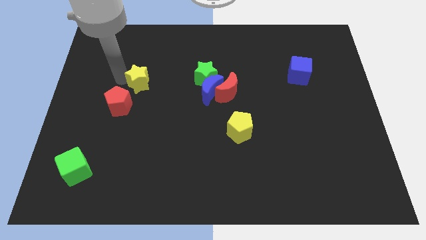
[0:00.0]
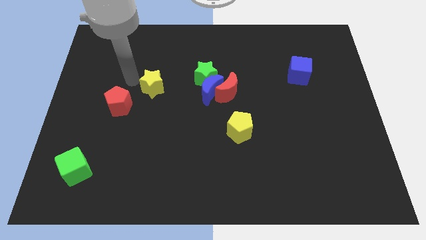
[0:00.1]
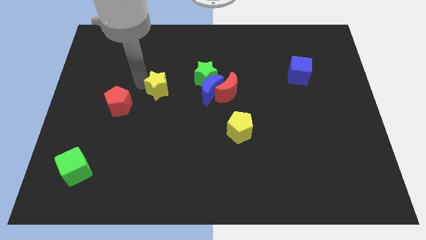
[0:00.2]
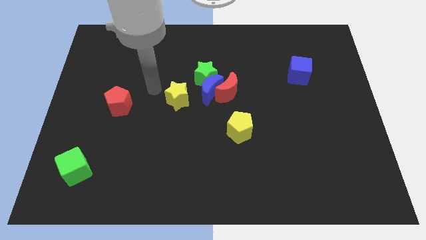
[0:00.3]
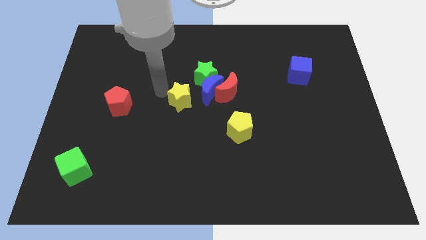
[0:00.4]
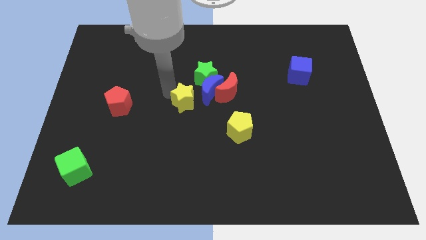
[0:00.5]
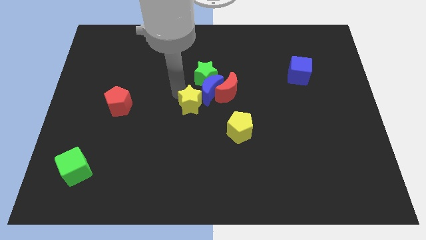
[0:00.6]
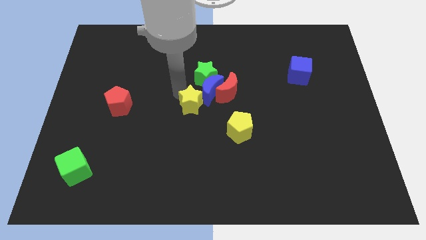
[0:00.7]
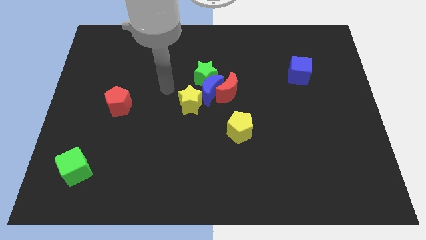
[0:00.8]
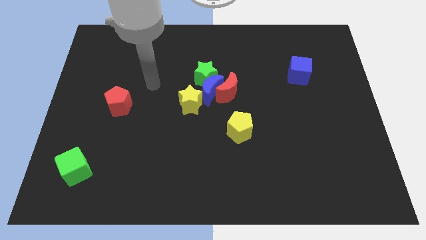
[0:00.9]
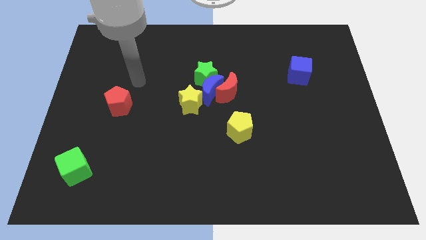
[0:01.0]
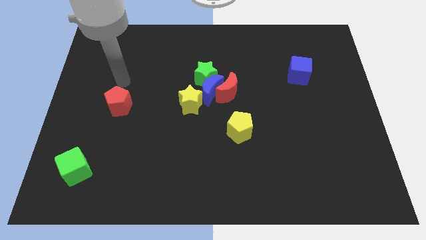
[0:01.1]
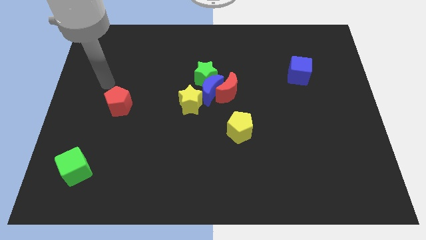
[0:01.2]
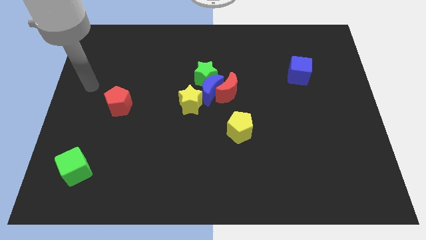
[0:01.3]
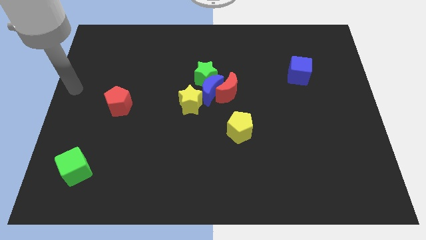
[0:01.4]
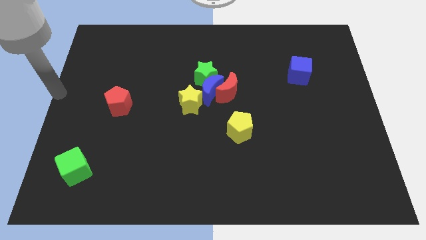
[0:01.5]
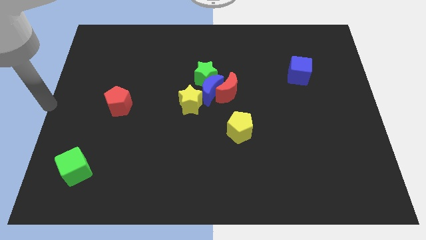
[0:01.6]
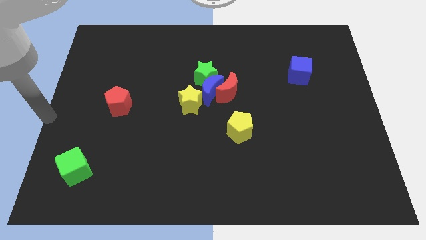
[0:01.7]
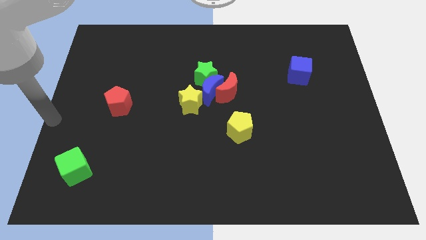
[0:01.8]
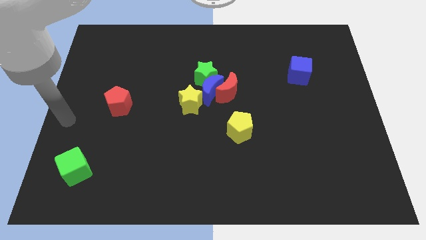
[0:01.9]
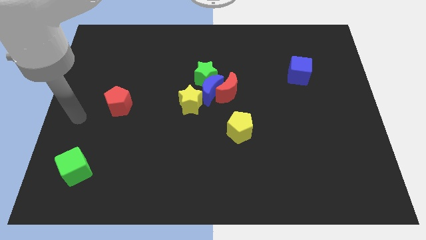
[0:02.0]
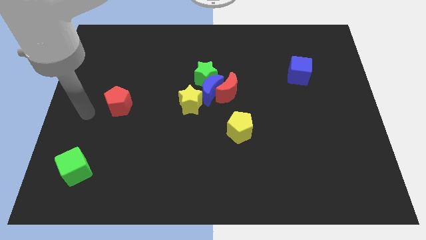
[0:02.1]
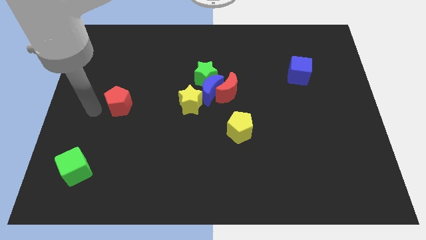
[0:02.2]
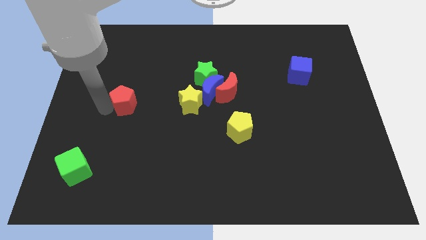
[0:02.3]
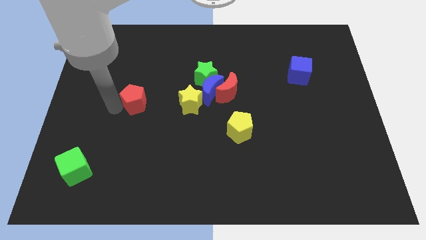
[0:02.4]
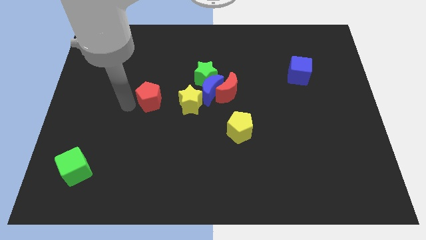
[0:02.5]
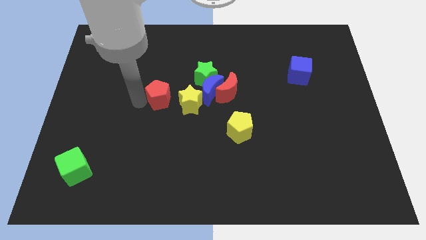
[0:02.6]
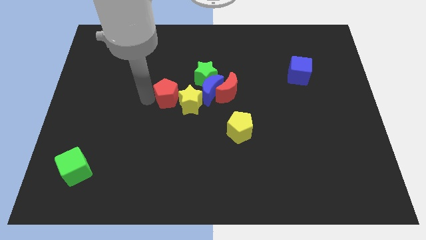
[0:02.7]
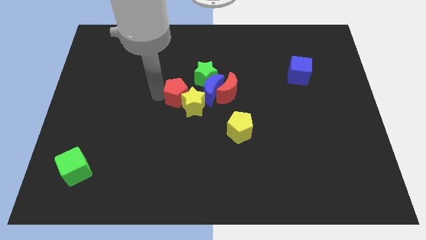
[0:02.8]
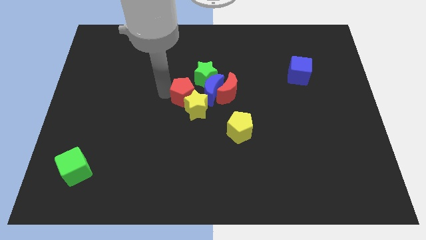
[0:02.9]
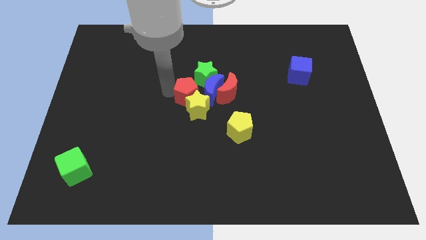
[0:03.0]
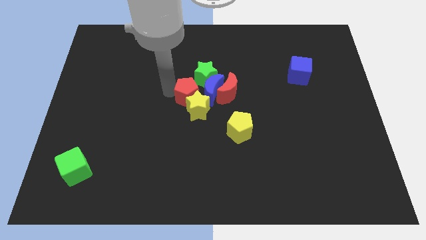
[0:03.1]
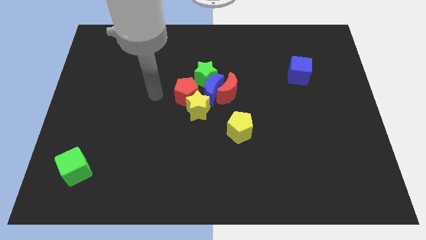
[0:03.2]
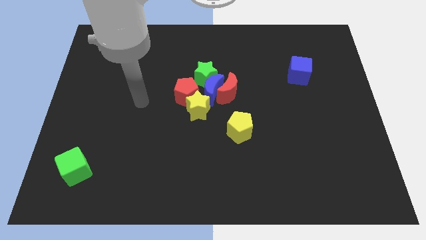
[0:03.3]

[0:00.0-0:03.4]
move the red pentagon down to the green star

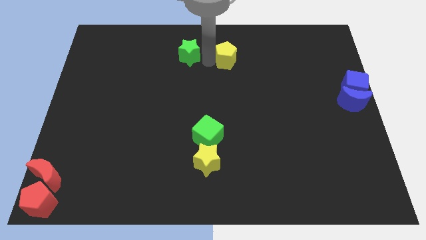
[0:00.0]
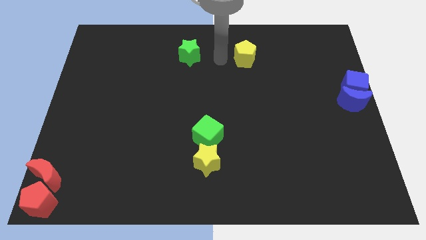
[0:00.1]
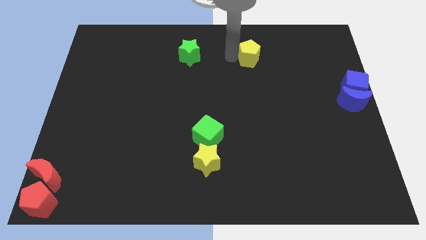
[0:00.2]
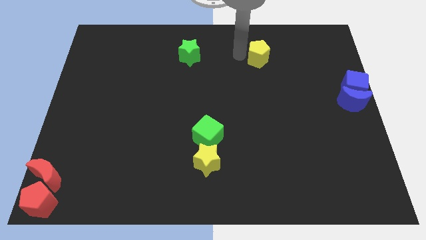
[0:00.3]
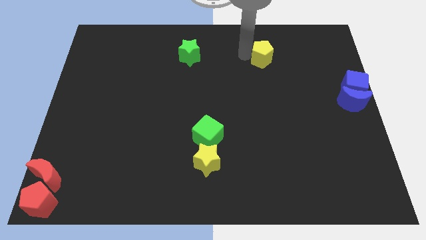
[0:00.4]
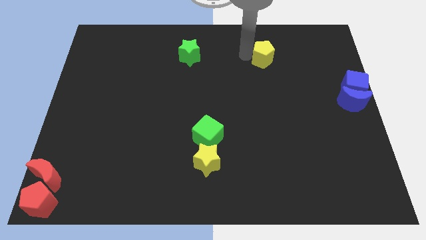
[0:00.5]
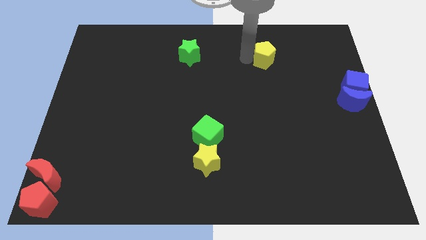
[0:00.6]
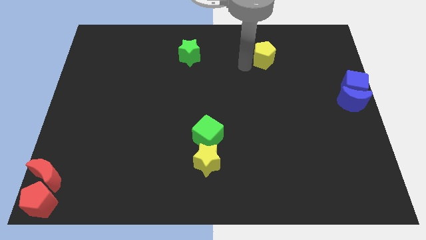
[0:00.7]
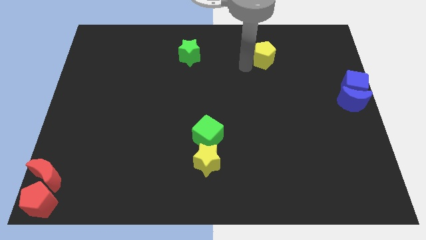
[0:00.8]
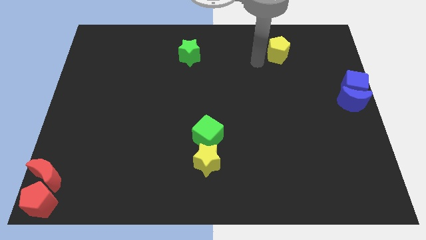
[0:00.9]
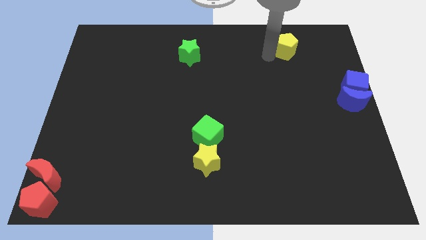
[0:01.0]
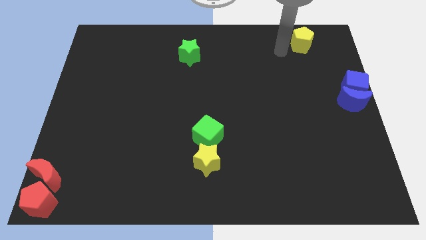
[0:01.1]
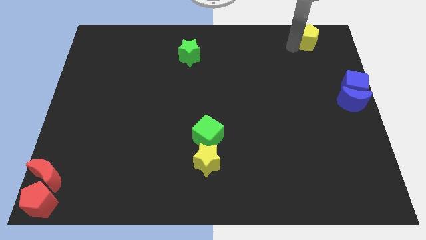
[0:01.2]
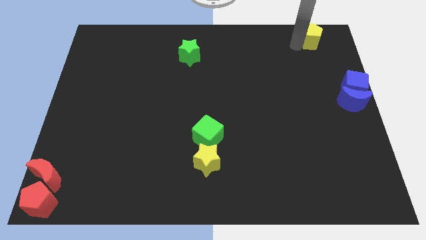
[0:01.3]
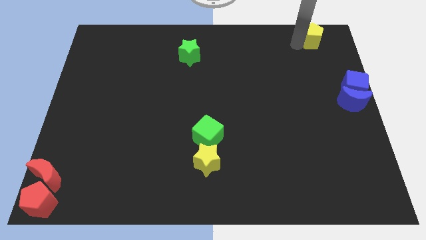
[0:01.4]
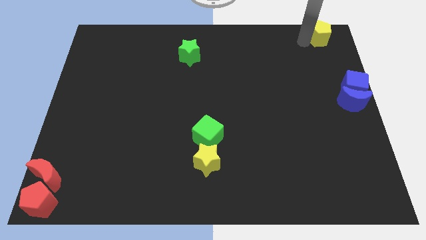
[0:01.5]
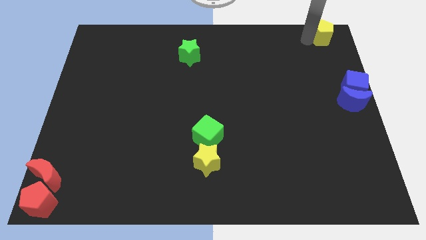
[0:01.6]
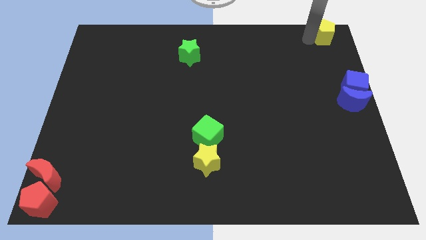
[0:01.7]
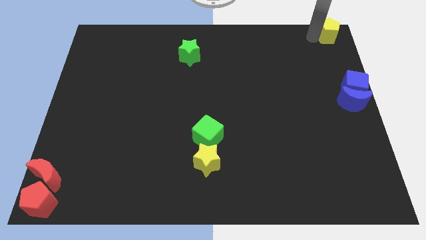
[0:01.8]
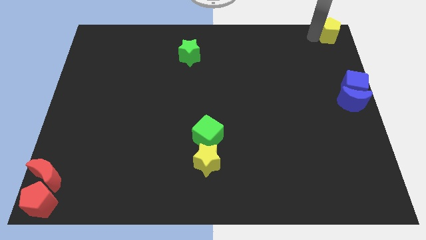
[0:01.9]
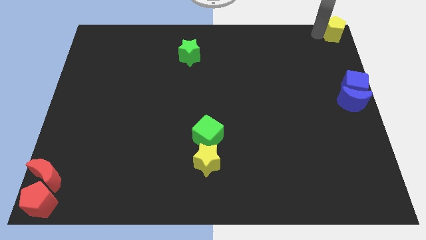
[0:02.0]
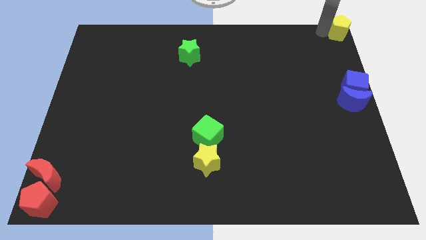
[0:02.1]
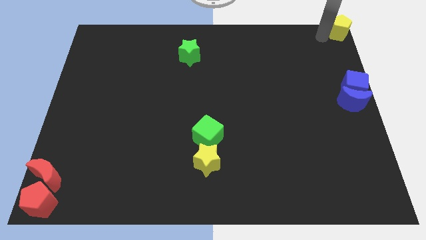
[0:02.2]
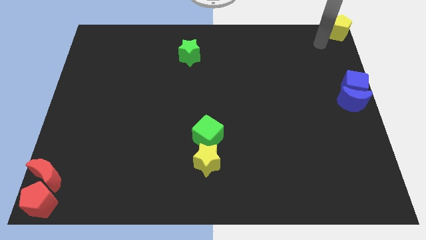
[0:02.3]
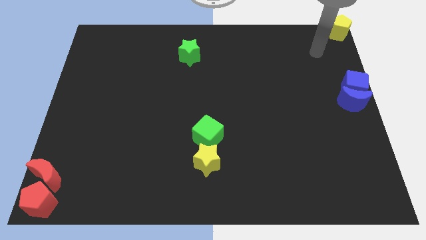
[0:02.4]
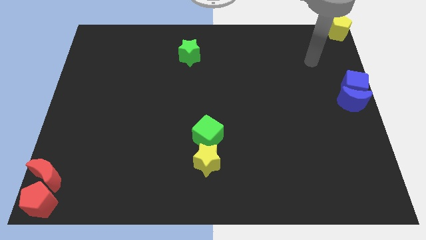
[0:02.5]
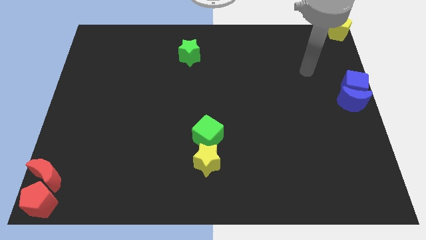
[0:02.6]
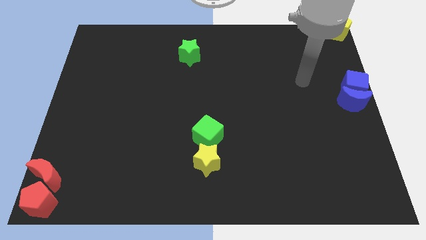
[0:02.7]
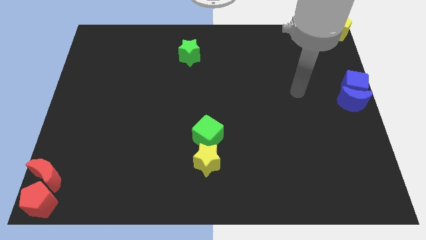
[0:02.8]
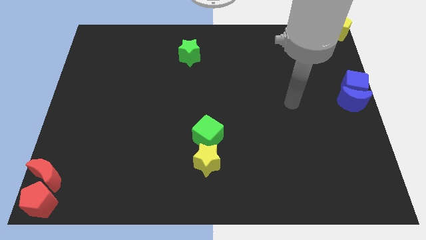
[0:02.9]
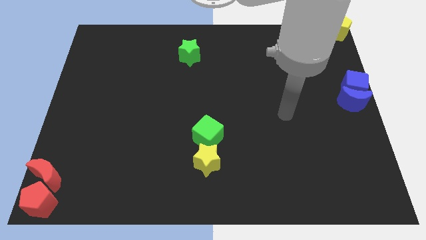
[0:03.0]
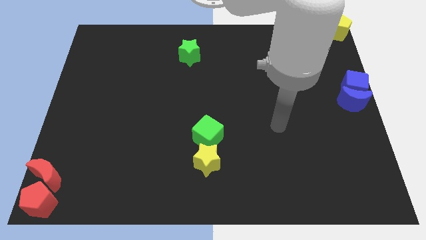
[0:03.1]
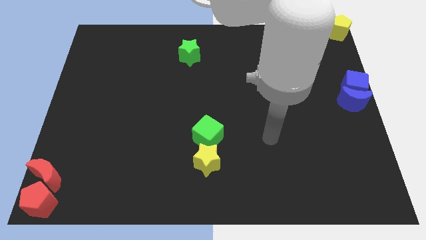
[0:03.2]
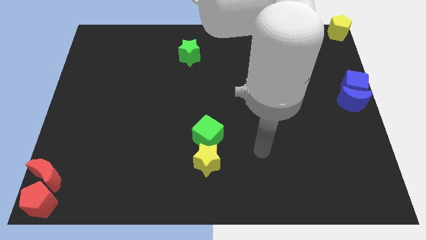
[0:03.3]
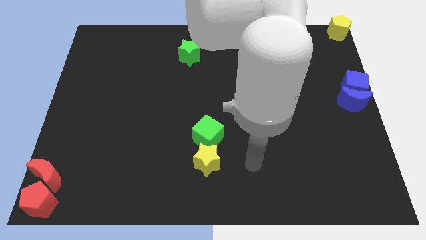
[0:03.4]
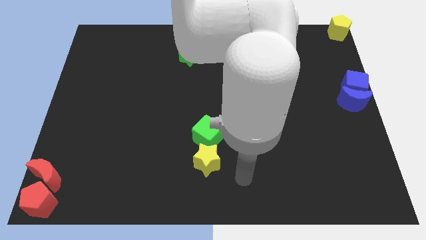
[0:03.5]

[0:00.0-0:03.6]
push the yellow pentagon to the top right corner of the board

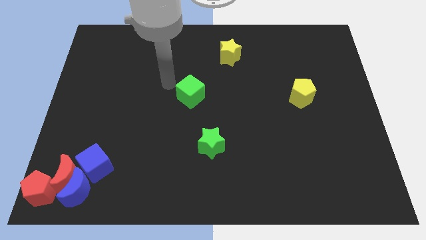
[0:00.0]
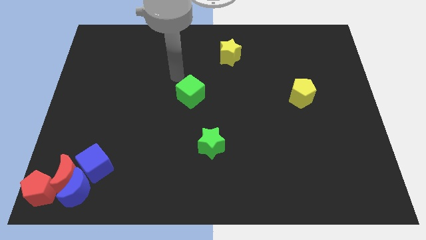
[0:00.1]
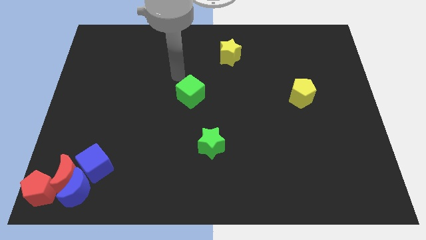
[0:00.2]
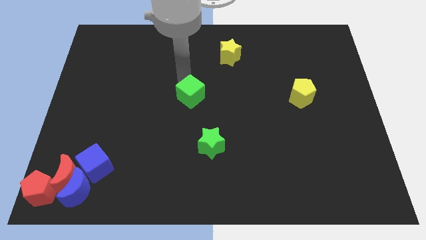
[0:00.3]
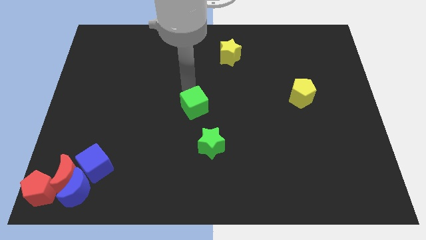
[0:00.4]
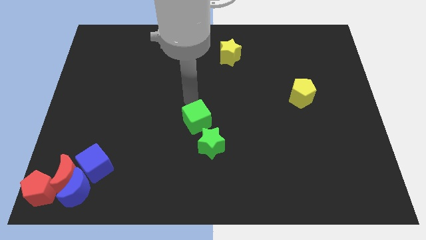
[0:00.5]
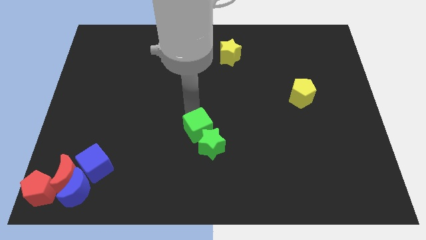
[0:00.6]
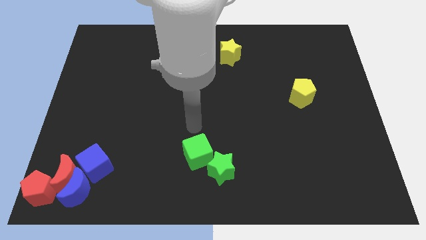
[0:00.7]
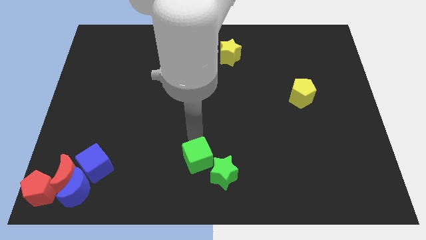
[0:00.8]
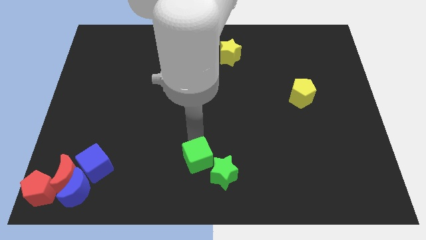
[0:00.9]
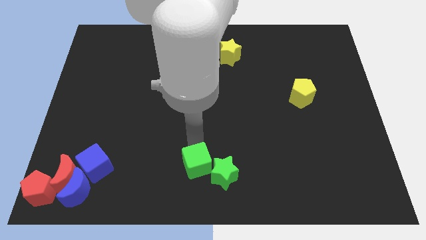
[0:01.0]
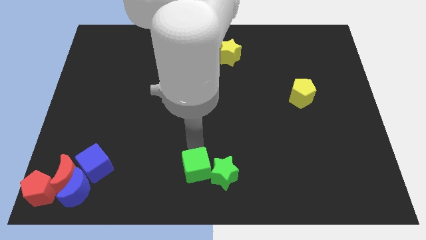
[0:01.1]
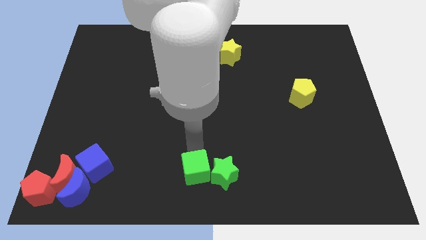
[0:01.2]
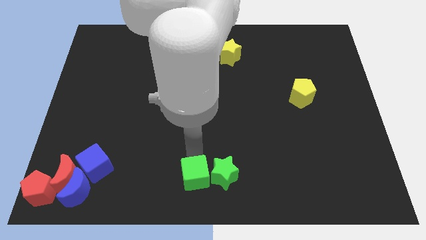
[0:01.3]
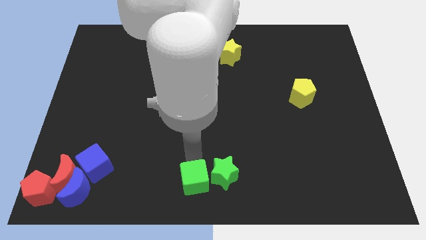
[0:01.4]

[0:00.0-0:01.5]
move green cube towards the green star

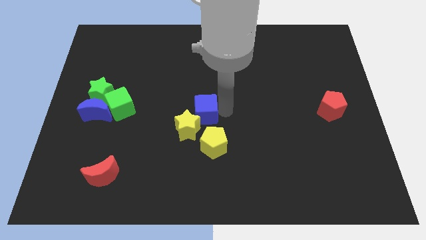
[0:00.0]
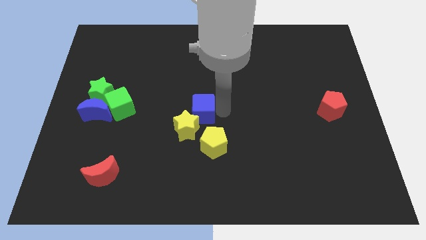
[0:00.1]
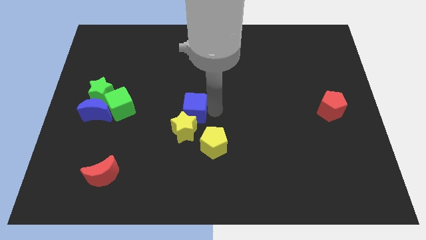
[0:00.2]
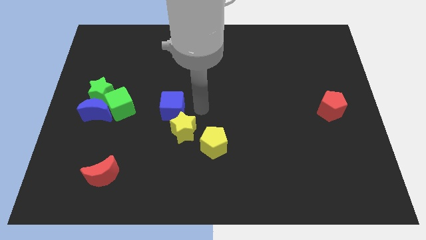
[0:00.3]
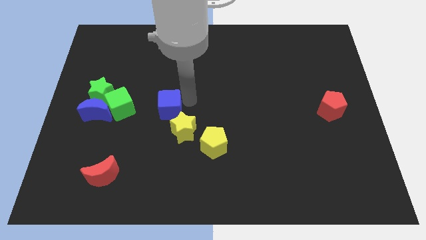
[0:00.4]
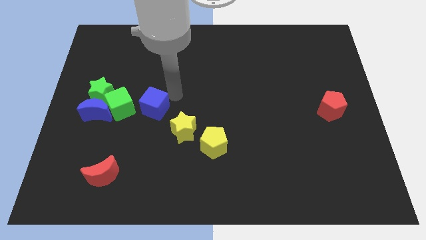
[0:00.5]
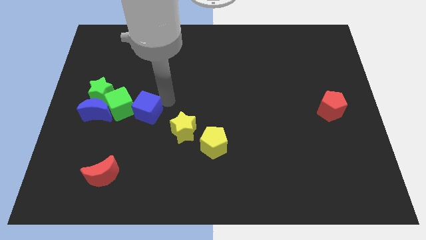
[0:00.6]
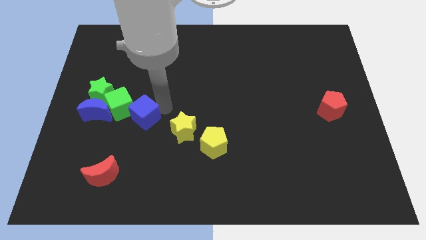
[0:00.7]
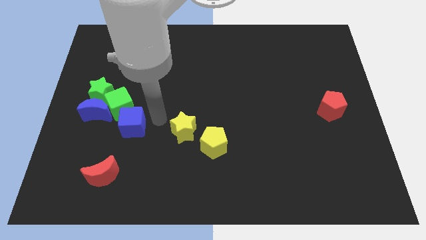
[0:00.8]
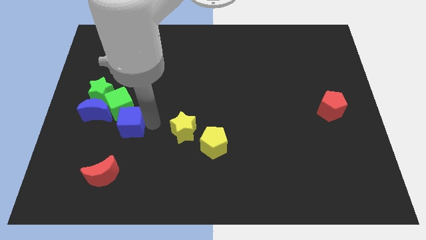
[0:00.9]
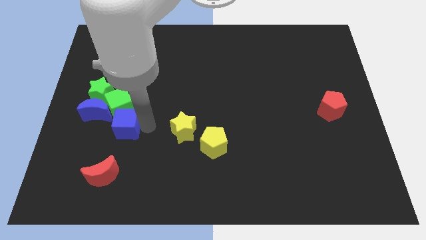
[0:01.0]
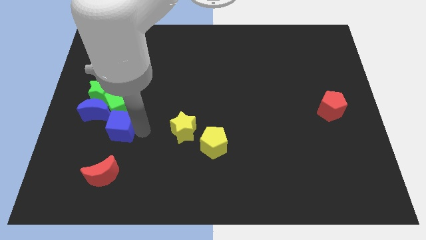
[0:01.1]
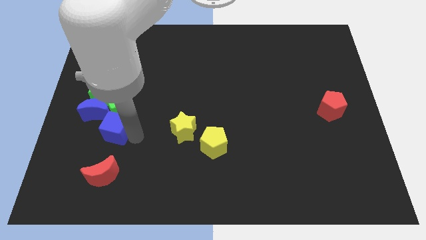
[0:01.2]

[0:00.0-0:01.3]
put blue cube below green cube
